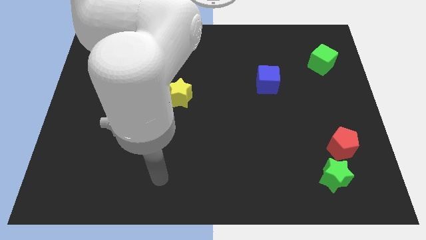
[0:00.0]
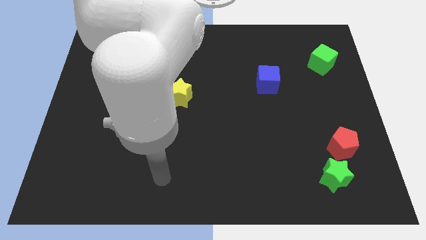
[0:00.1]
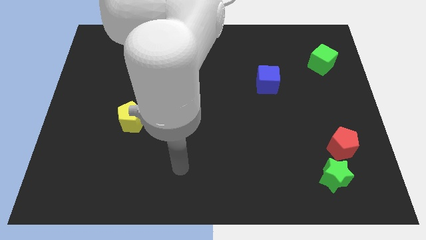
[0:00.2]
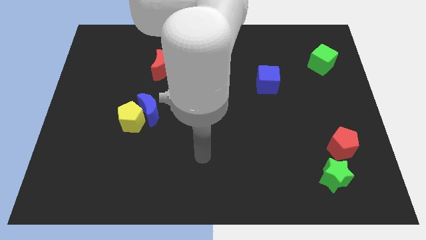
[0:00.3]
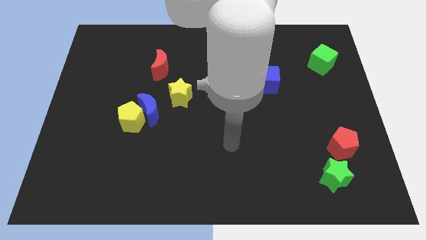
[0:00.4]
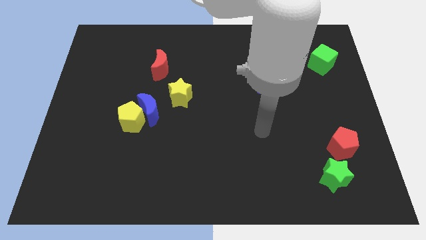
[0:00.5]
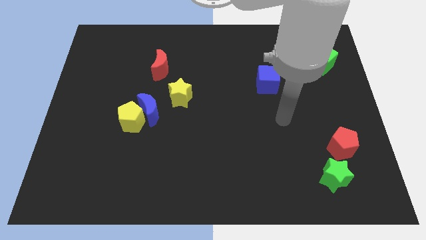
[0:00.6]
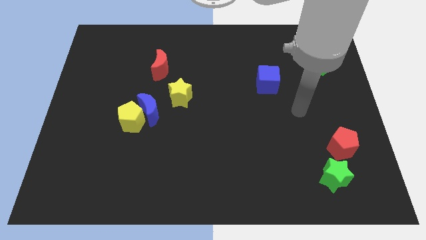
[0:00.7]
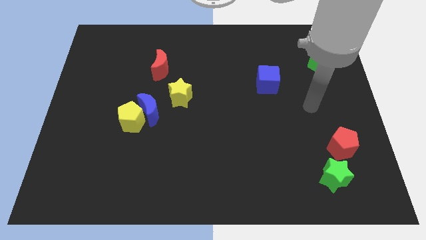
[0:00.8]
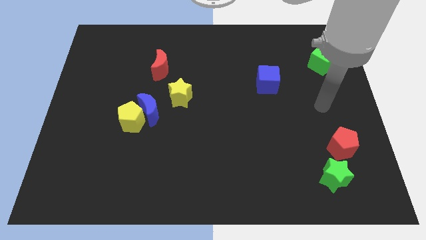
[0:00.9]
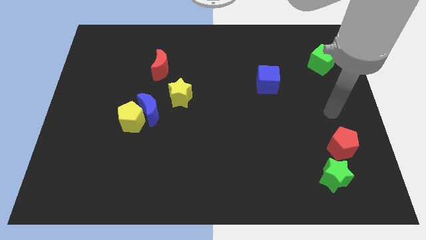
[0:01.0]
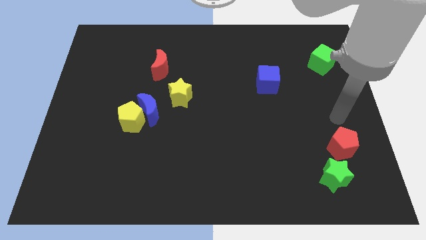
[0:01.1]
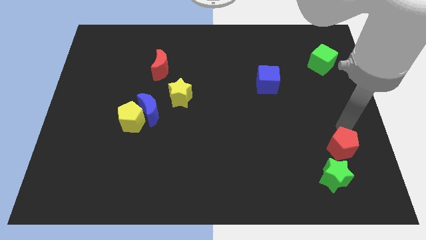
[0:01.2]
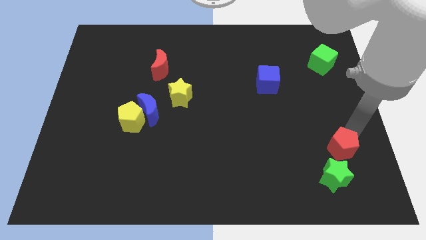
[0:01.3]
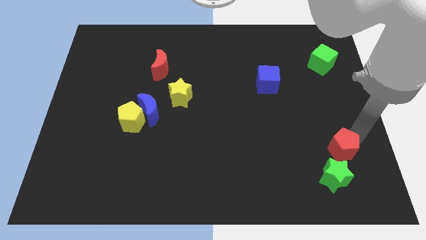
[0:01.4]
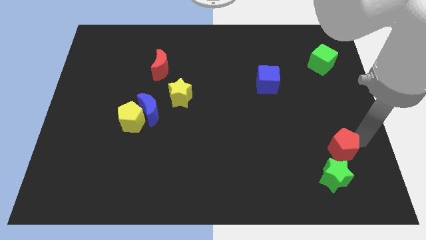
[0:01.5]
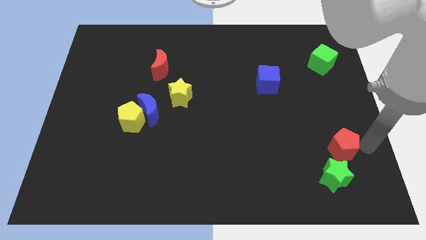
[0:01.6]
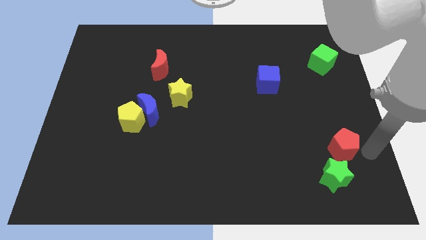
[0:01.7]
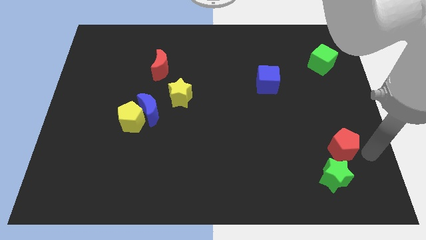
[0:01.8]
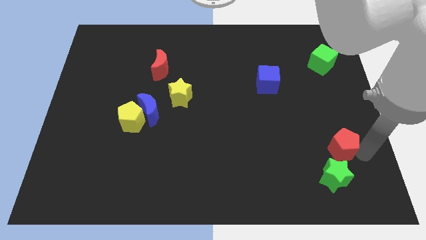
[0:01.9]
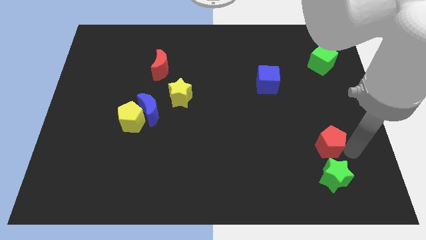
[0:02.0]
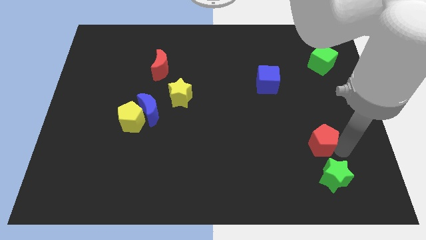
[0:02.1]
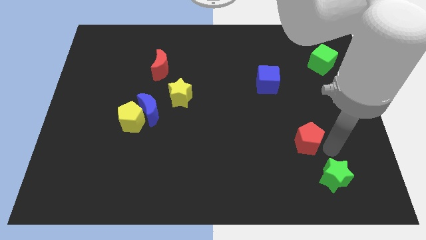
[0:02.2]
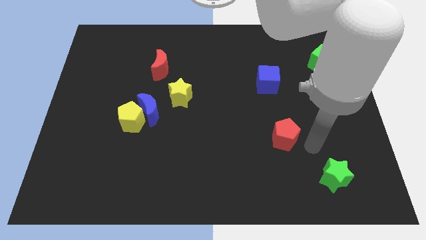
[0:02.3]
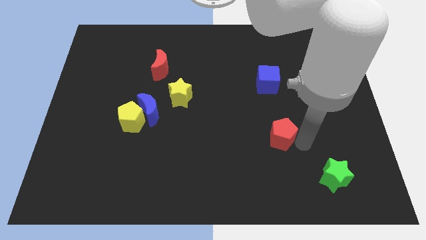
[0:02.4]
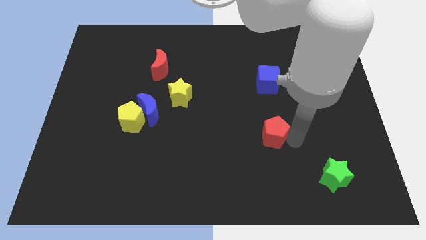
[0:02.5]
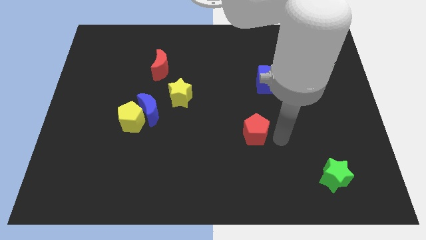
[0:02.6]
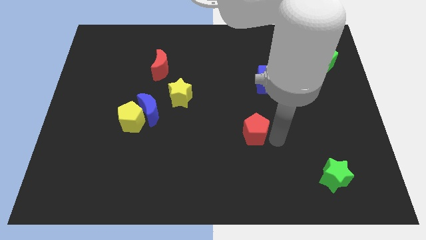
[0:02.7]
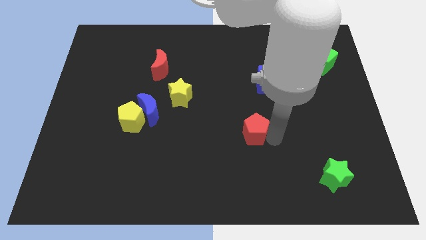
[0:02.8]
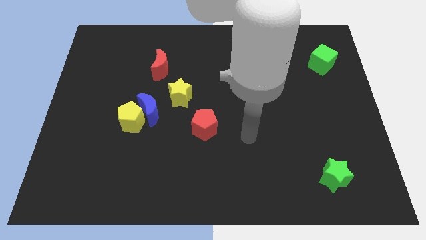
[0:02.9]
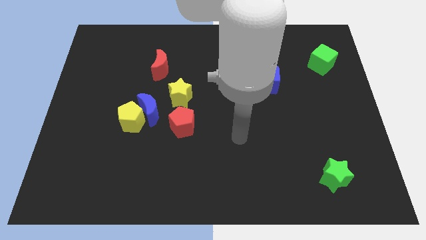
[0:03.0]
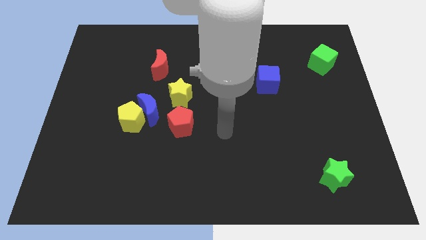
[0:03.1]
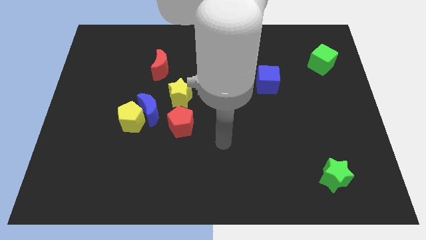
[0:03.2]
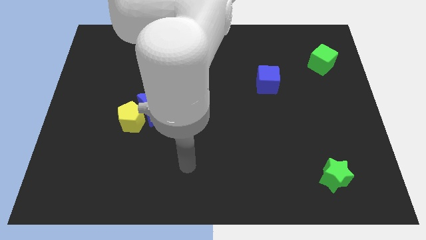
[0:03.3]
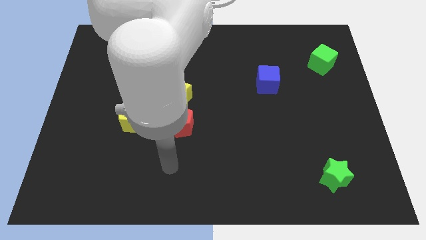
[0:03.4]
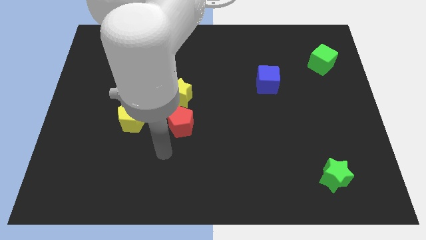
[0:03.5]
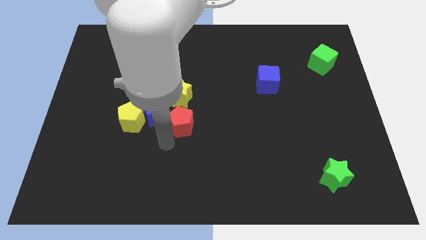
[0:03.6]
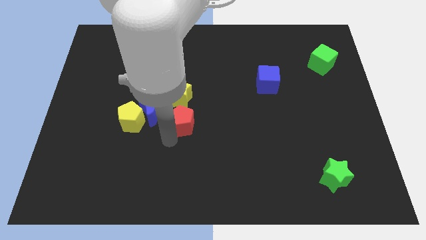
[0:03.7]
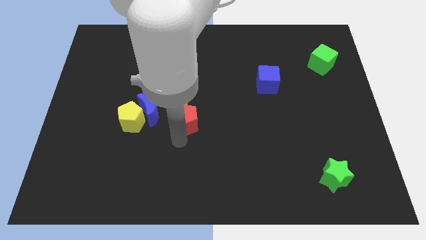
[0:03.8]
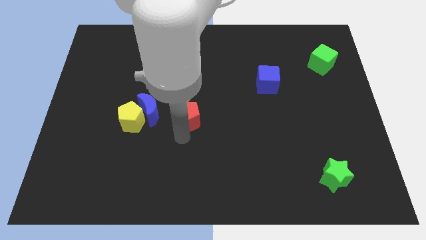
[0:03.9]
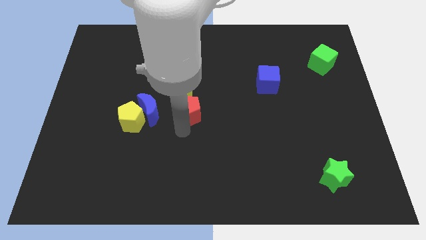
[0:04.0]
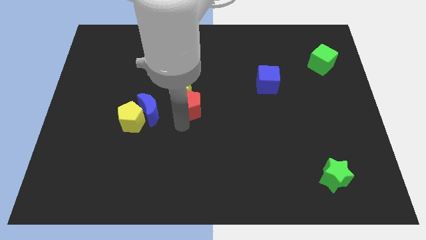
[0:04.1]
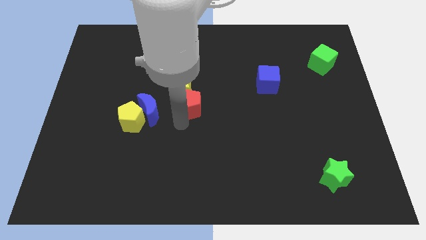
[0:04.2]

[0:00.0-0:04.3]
put the red pentagon to the yellow star

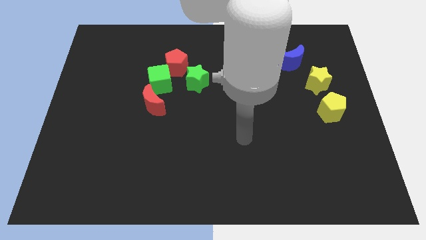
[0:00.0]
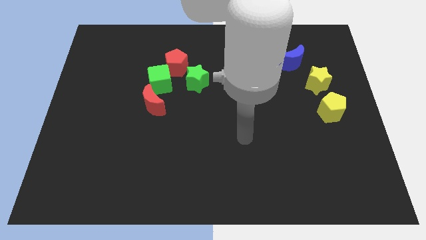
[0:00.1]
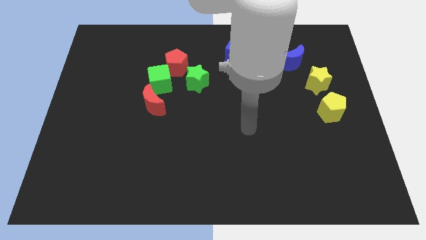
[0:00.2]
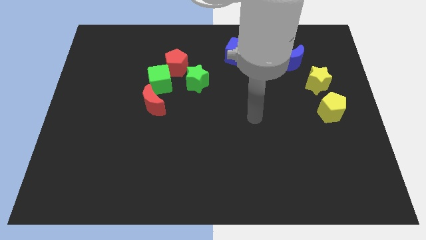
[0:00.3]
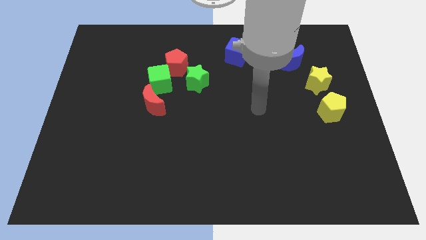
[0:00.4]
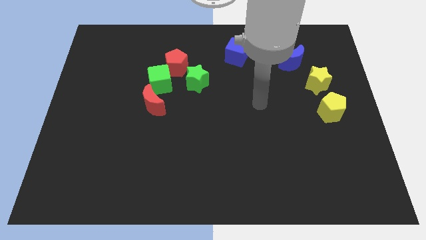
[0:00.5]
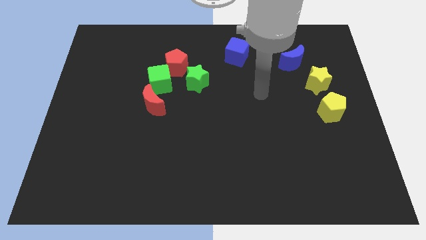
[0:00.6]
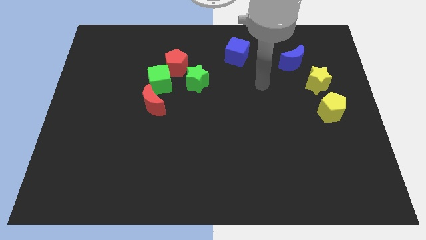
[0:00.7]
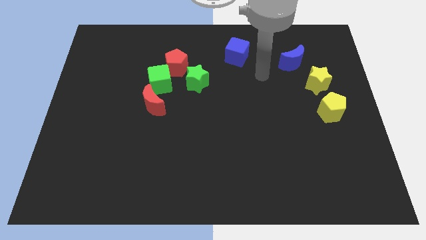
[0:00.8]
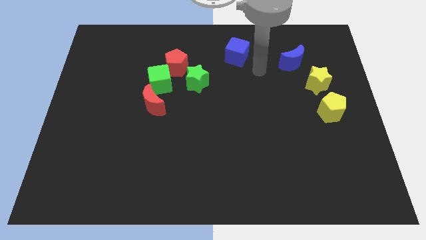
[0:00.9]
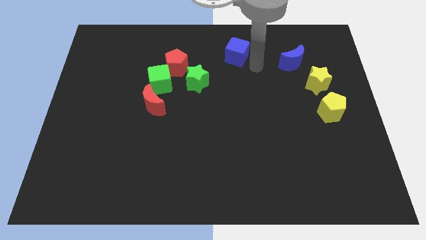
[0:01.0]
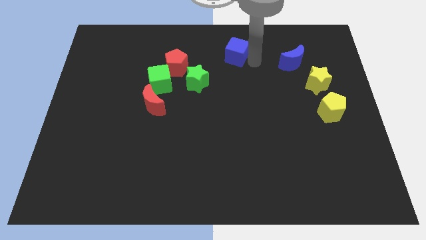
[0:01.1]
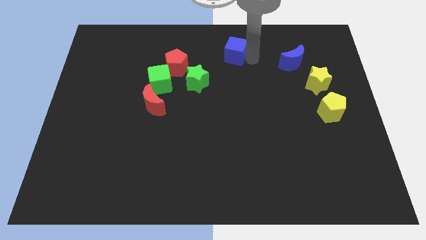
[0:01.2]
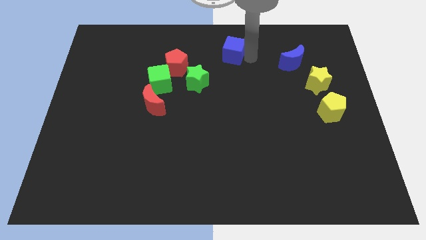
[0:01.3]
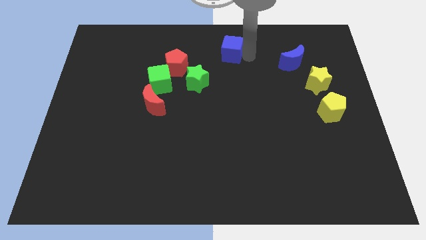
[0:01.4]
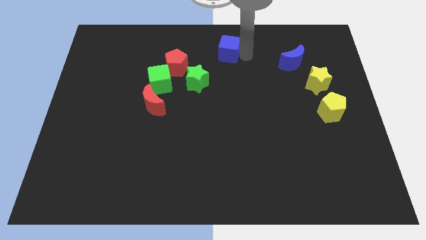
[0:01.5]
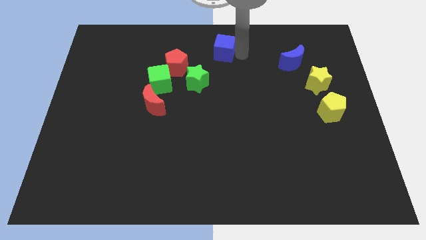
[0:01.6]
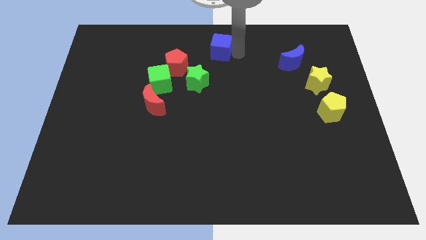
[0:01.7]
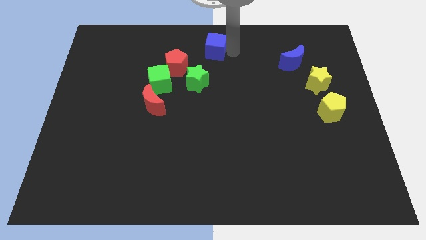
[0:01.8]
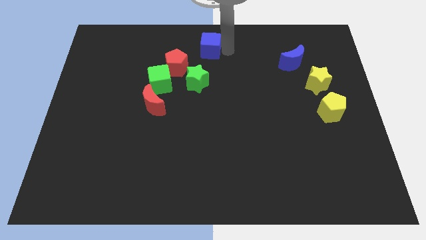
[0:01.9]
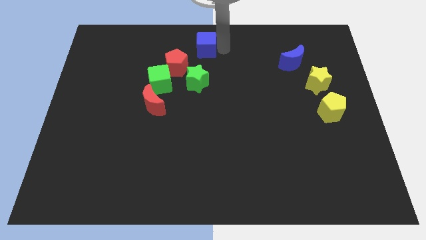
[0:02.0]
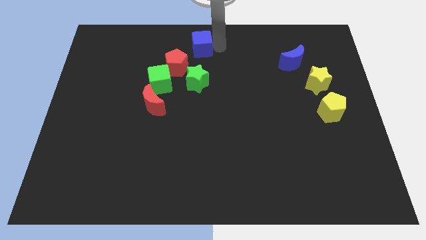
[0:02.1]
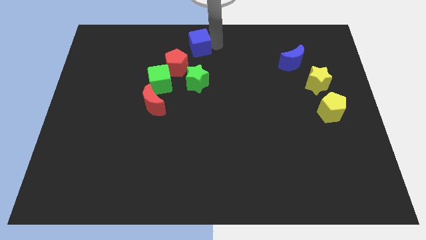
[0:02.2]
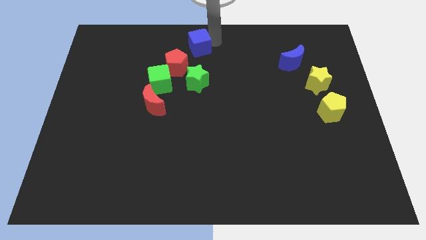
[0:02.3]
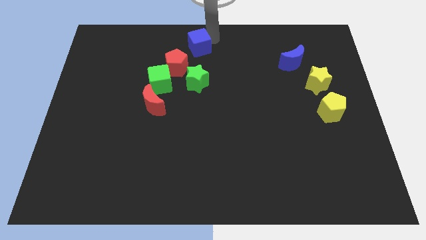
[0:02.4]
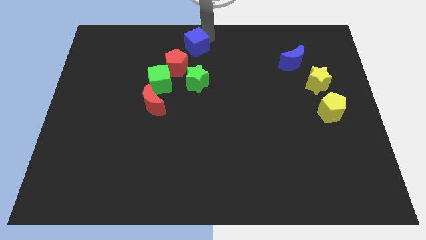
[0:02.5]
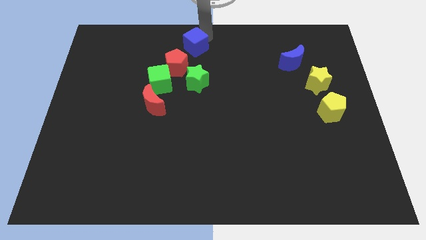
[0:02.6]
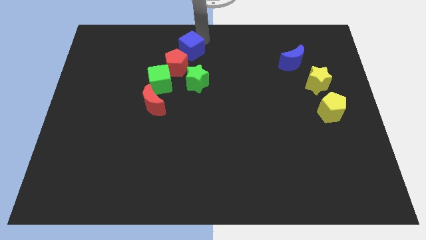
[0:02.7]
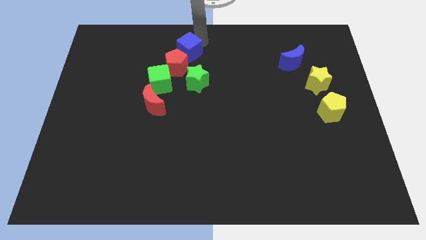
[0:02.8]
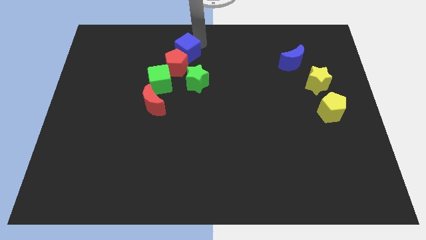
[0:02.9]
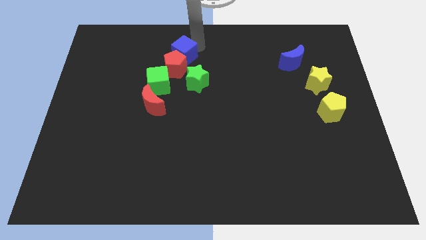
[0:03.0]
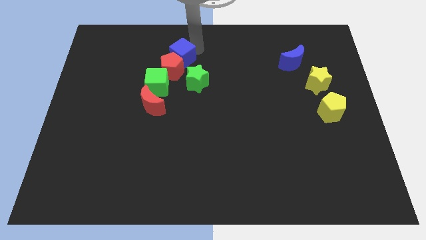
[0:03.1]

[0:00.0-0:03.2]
put the blue cube to the red pentagon

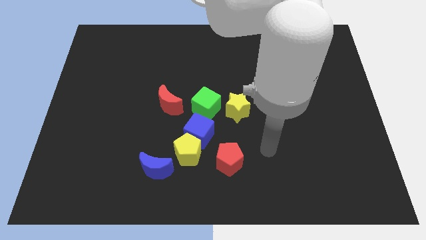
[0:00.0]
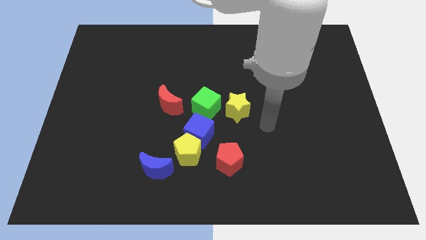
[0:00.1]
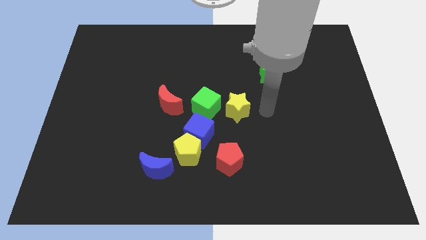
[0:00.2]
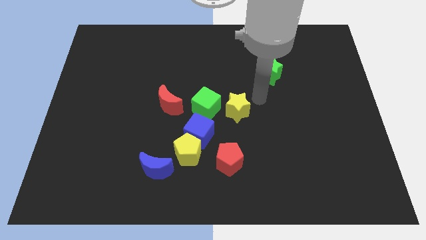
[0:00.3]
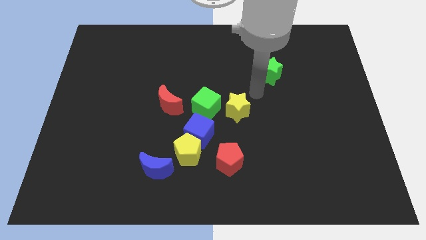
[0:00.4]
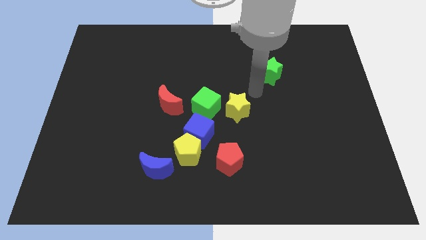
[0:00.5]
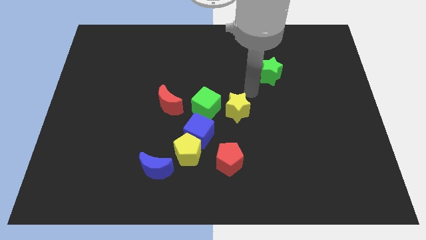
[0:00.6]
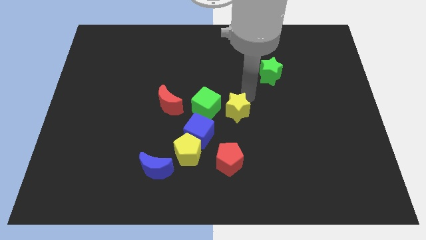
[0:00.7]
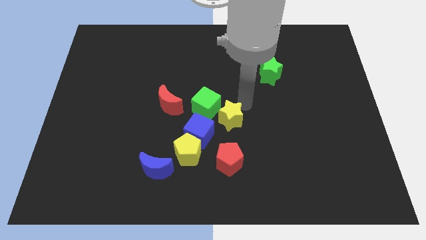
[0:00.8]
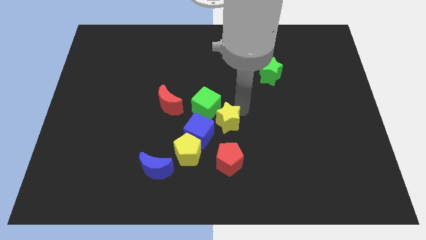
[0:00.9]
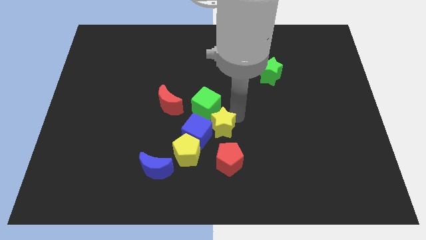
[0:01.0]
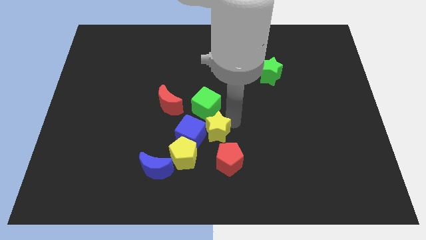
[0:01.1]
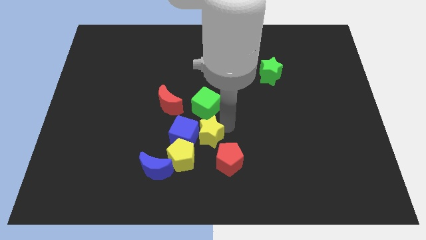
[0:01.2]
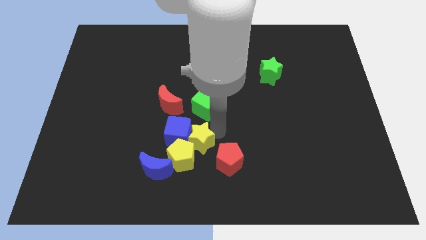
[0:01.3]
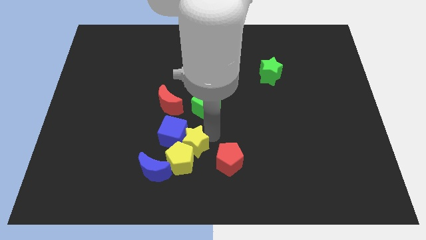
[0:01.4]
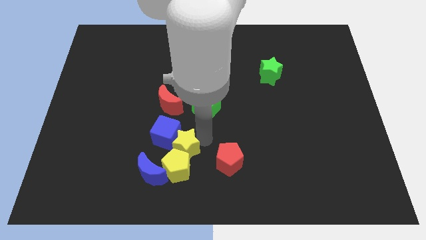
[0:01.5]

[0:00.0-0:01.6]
slide the yellow star to the yellow pentagon
